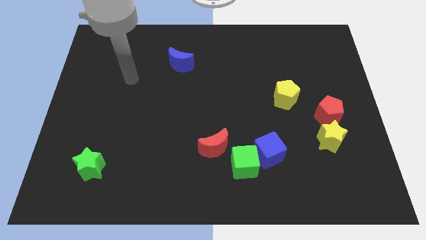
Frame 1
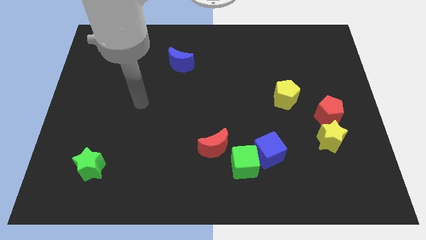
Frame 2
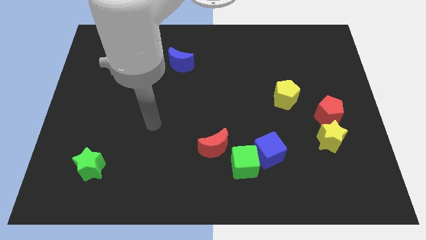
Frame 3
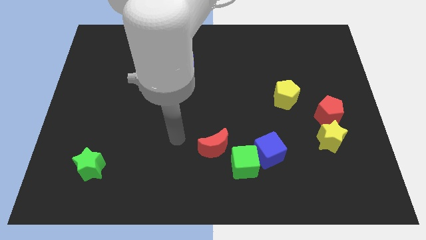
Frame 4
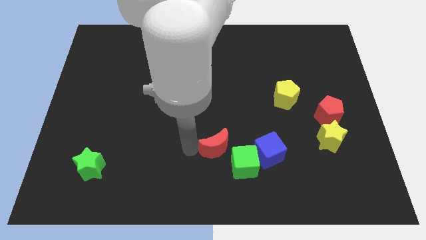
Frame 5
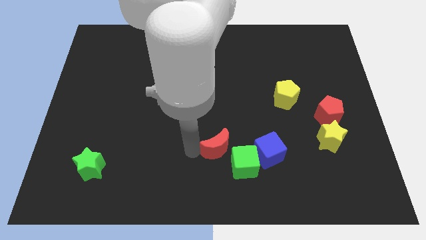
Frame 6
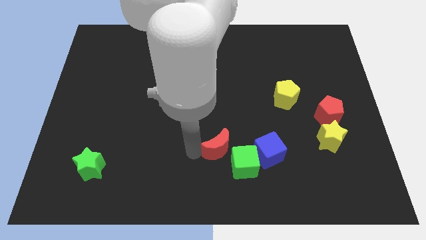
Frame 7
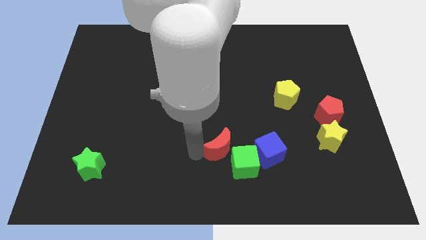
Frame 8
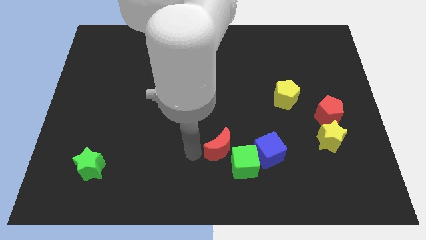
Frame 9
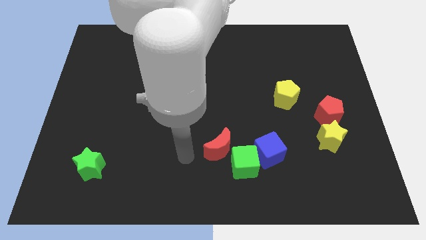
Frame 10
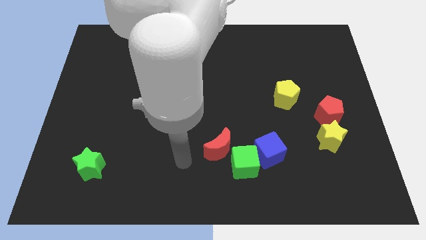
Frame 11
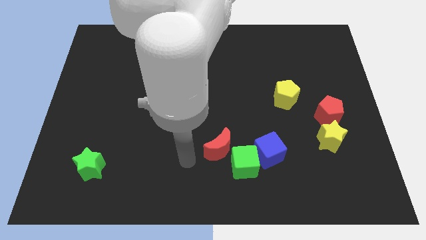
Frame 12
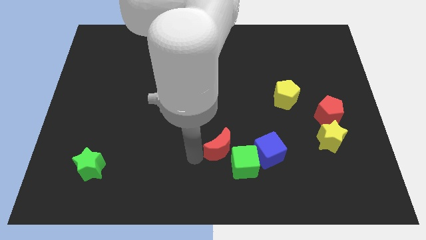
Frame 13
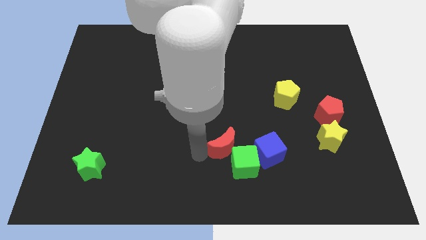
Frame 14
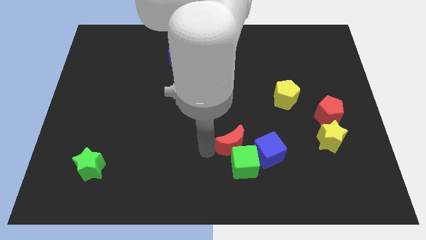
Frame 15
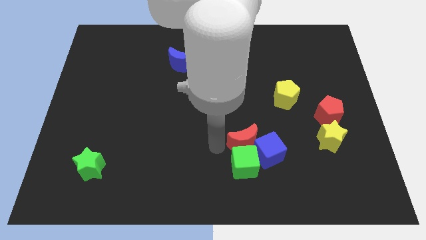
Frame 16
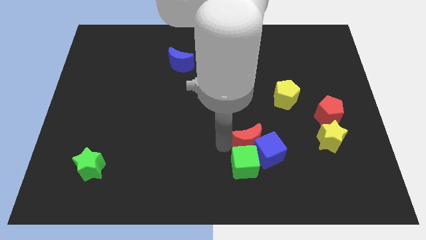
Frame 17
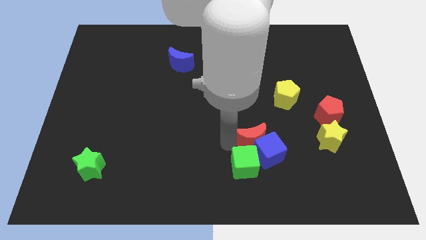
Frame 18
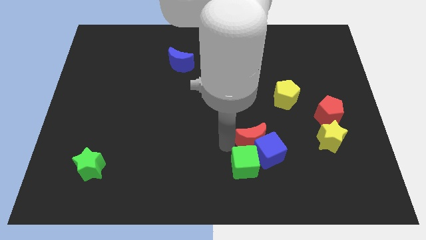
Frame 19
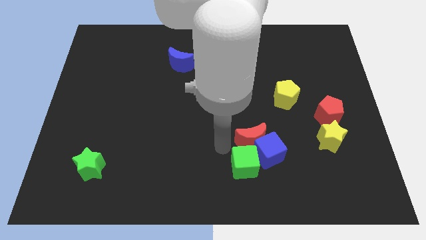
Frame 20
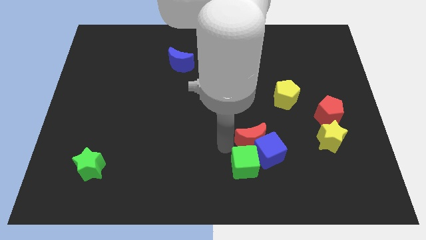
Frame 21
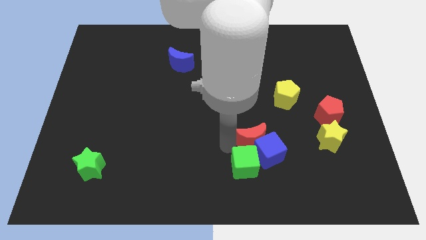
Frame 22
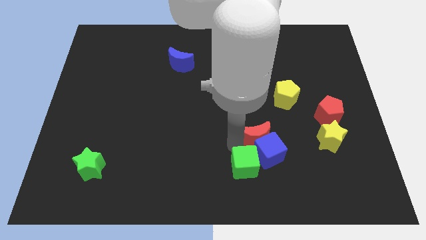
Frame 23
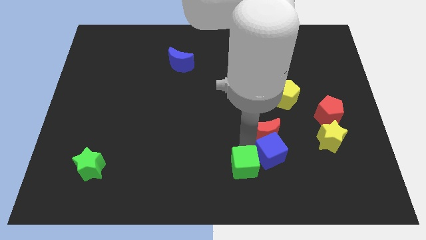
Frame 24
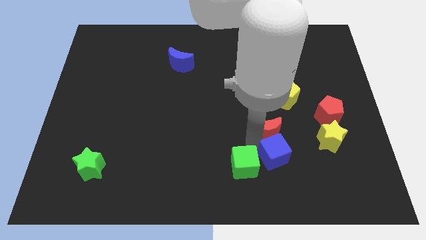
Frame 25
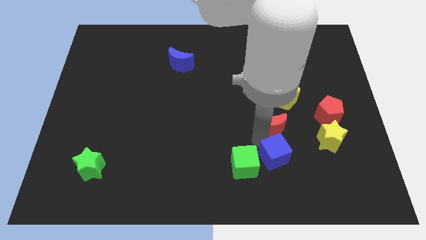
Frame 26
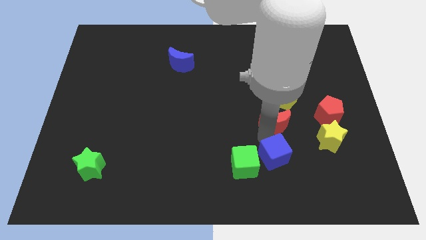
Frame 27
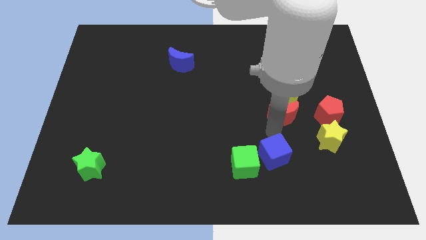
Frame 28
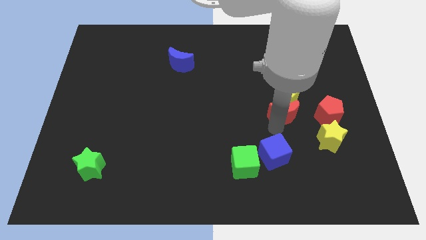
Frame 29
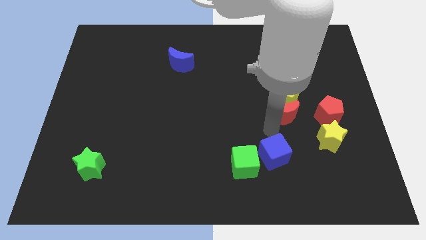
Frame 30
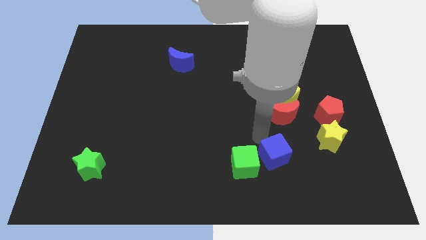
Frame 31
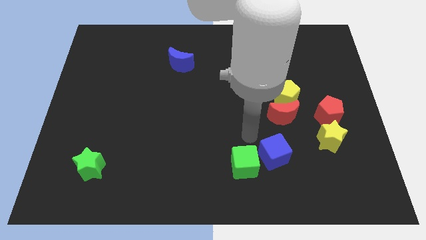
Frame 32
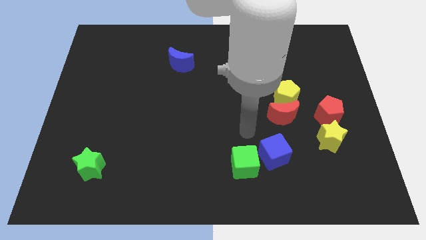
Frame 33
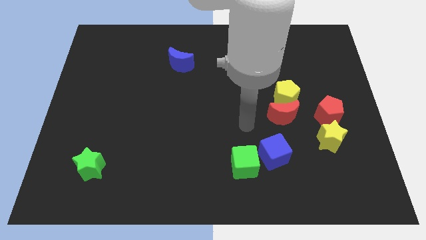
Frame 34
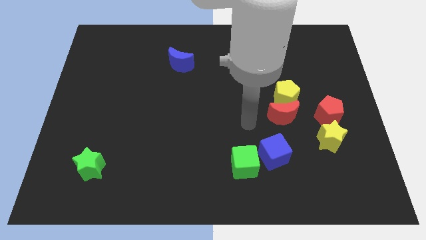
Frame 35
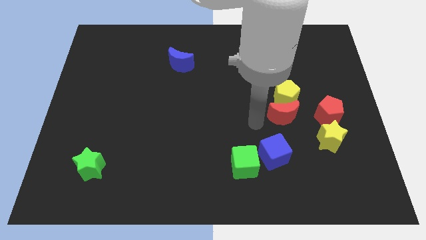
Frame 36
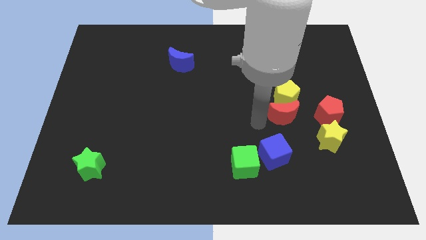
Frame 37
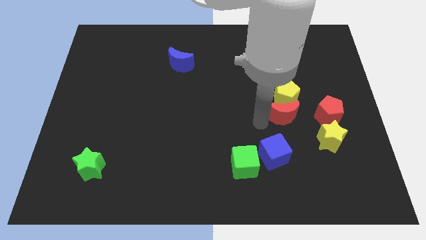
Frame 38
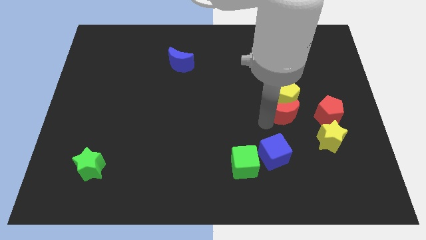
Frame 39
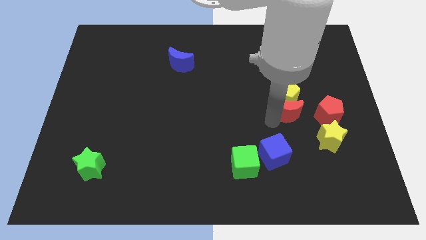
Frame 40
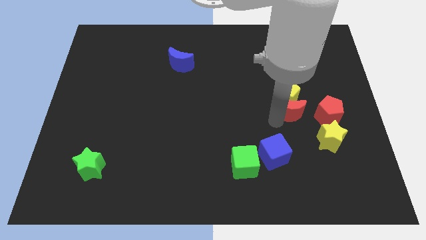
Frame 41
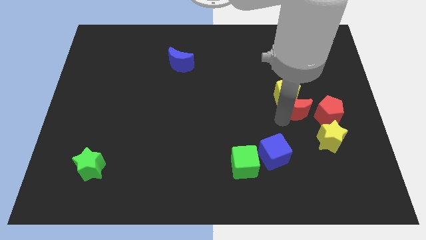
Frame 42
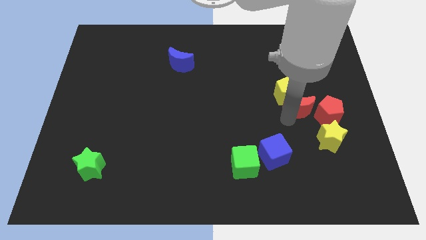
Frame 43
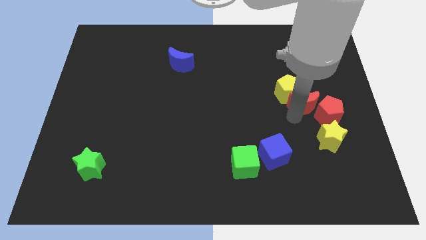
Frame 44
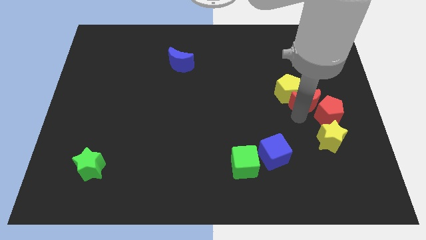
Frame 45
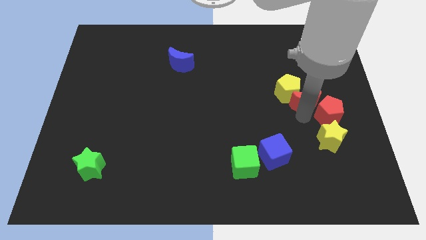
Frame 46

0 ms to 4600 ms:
push the red moon to the red pentagon

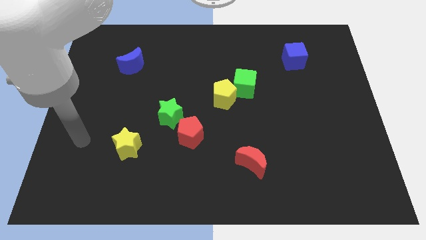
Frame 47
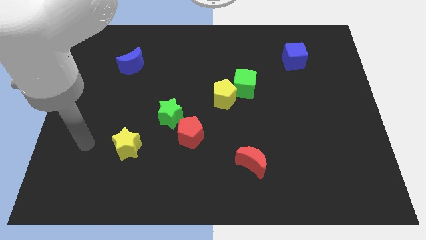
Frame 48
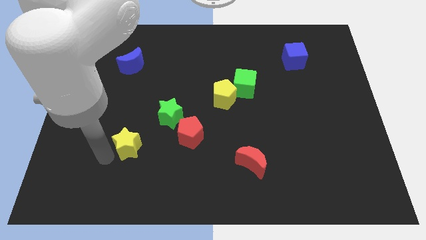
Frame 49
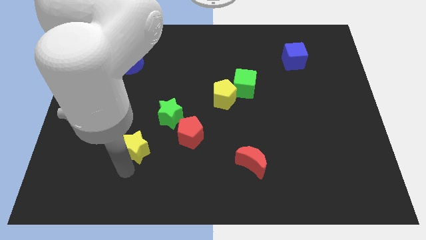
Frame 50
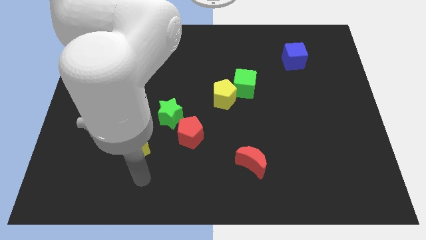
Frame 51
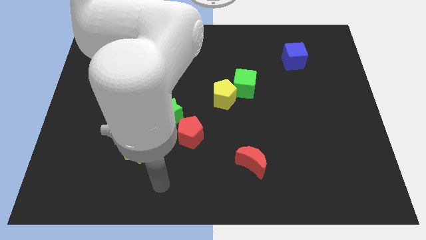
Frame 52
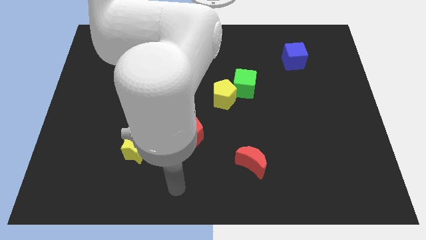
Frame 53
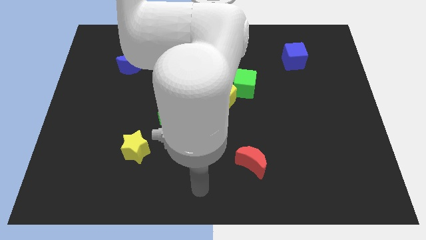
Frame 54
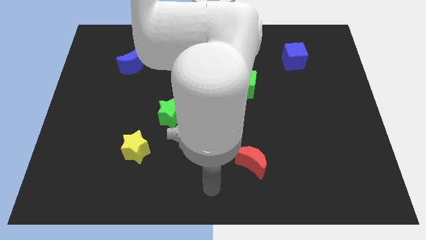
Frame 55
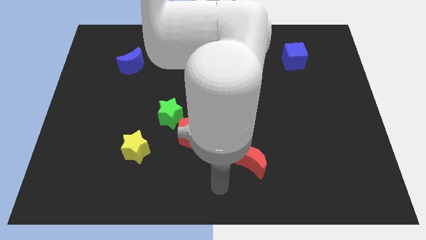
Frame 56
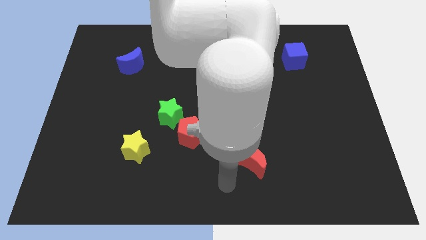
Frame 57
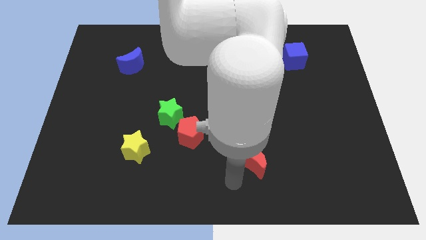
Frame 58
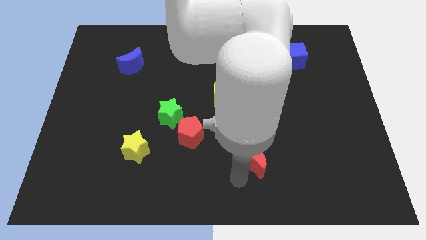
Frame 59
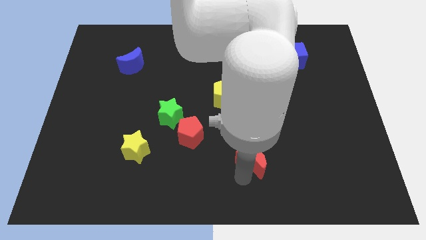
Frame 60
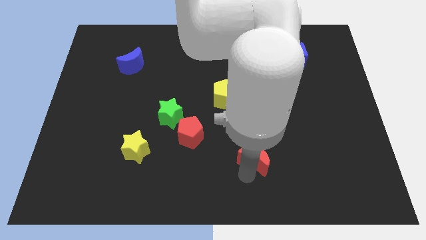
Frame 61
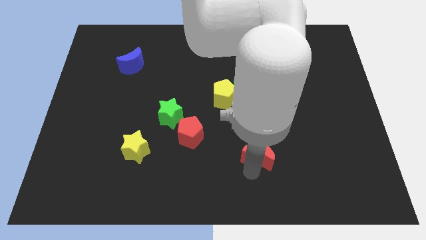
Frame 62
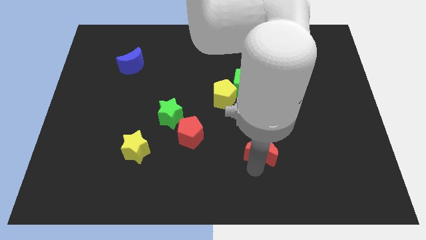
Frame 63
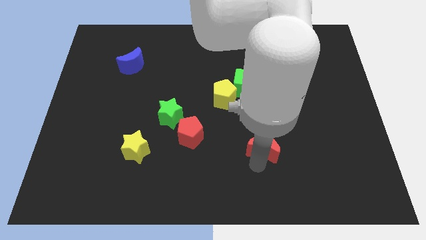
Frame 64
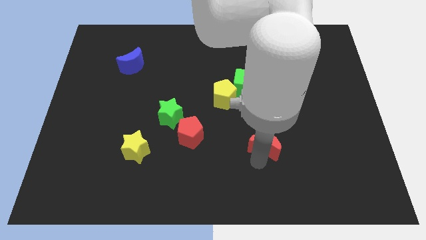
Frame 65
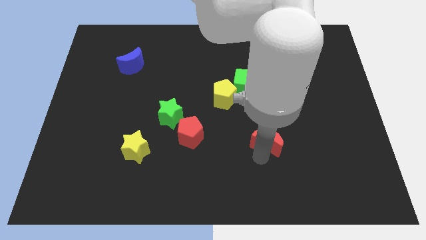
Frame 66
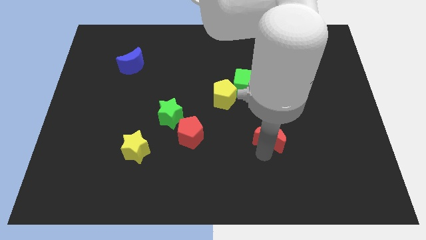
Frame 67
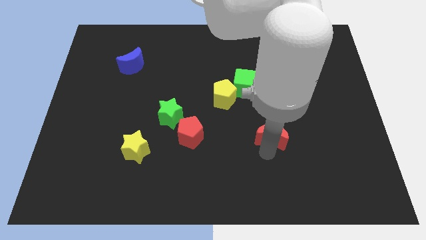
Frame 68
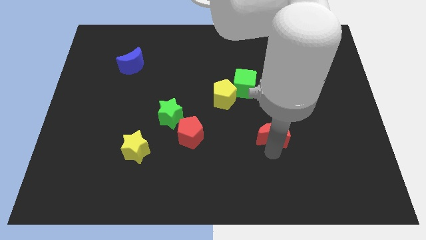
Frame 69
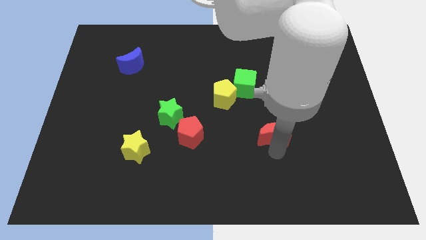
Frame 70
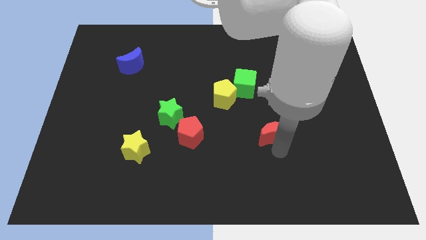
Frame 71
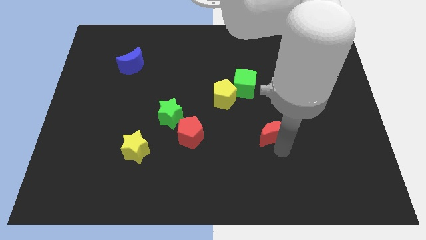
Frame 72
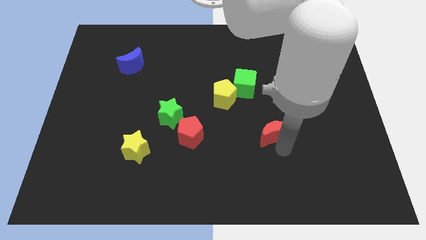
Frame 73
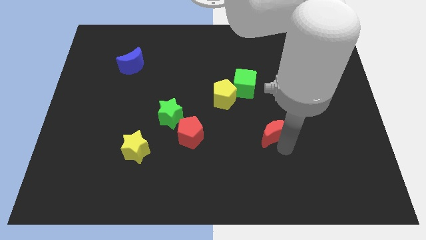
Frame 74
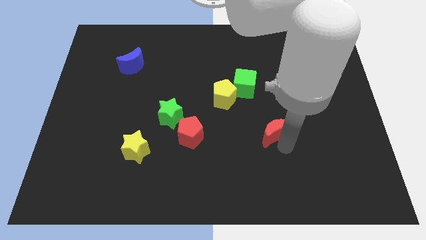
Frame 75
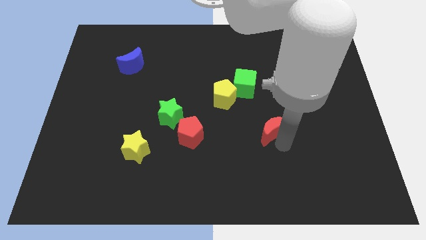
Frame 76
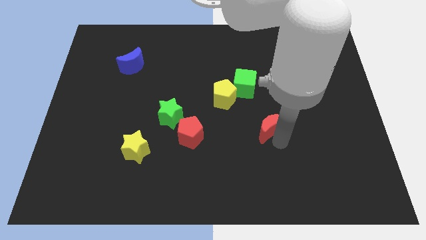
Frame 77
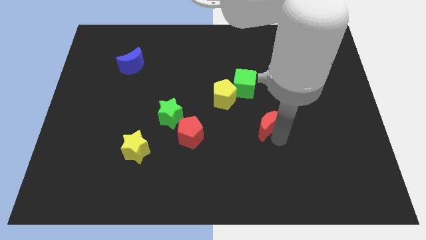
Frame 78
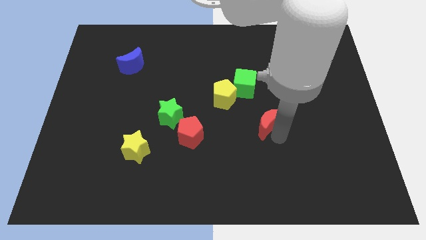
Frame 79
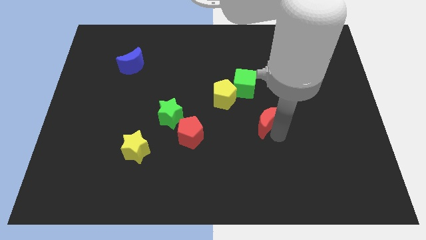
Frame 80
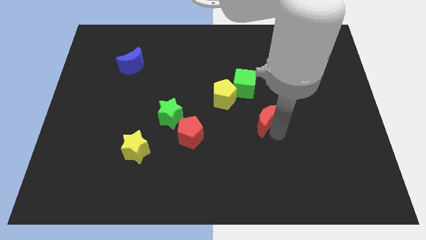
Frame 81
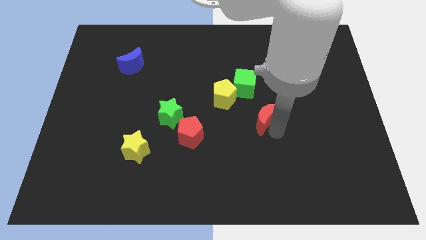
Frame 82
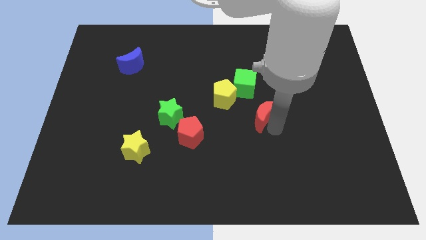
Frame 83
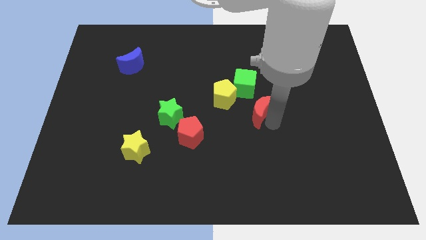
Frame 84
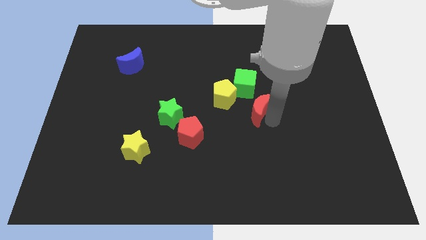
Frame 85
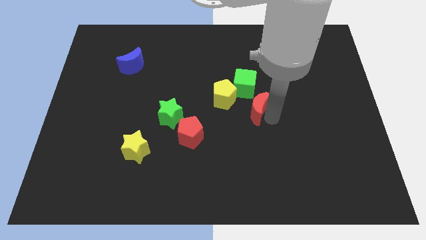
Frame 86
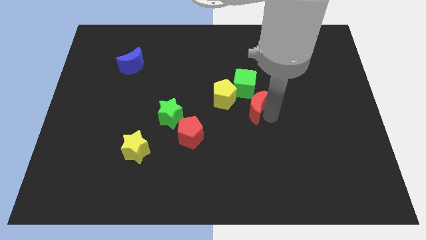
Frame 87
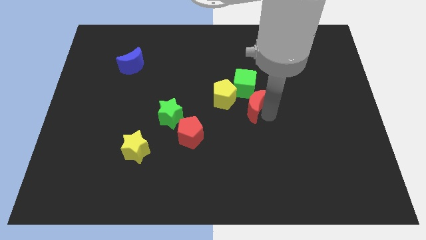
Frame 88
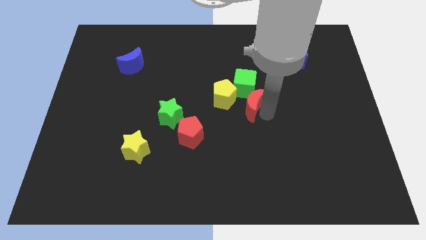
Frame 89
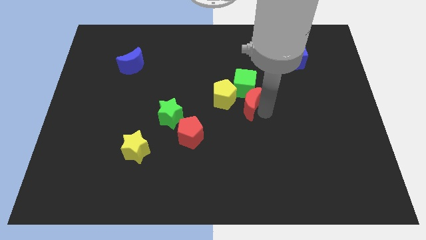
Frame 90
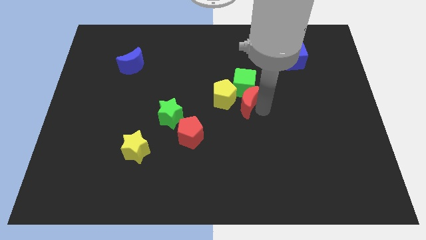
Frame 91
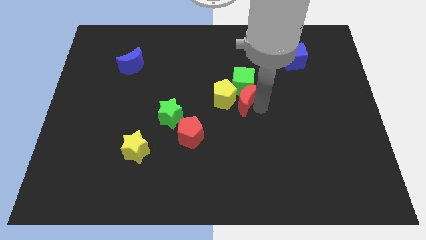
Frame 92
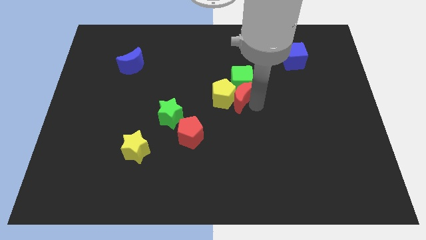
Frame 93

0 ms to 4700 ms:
move the red moon to the yellow pentagon
